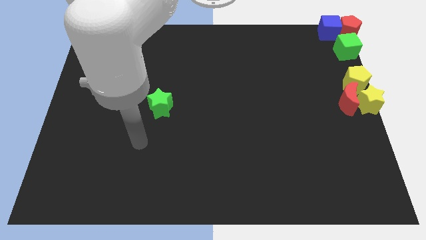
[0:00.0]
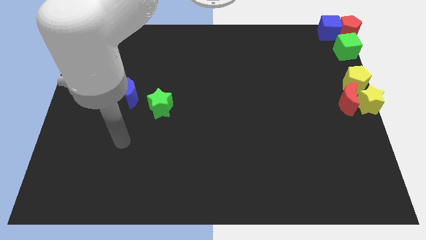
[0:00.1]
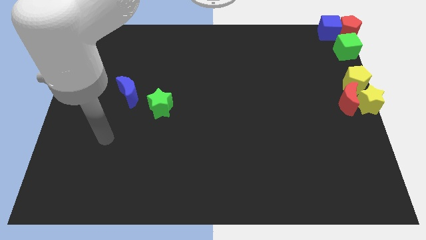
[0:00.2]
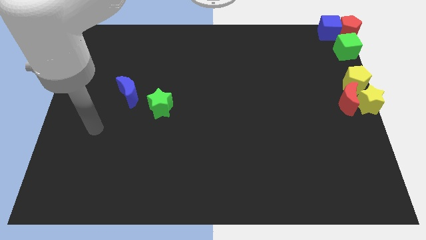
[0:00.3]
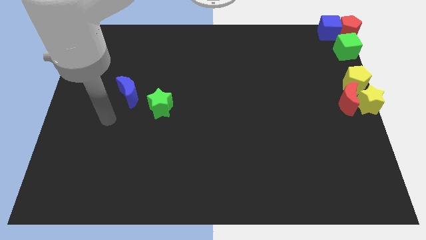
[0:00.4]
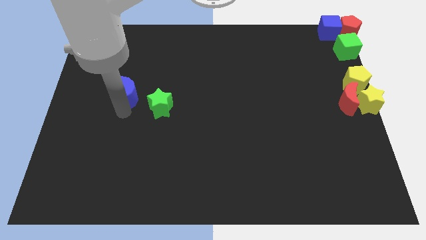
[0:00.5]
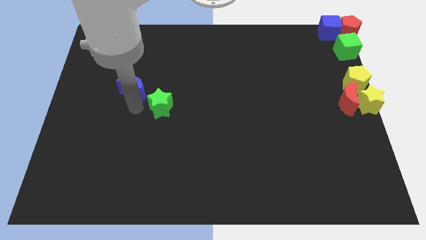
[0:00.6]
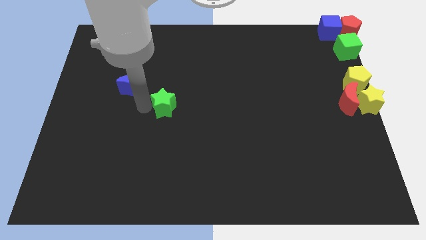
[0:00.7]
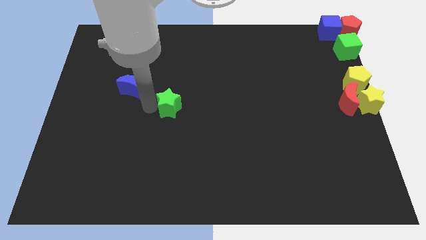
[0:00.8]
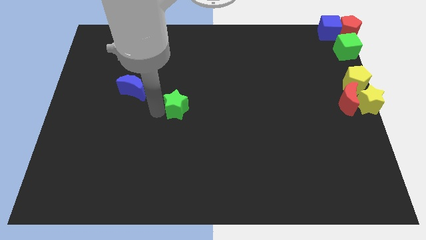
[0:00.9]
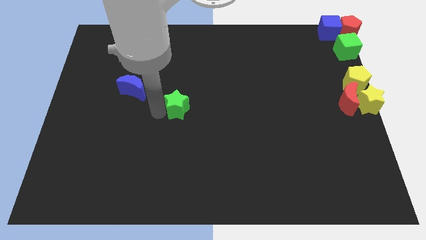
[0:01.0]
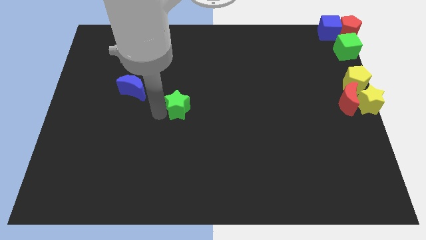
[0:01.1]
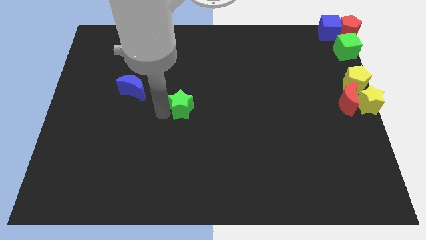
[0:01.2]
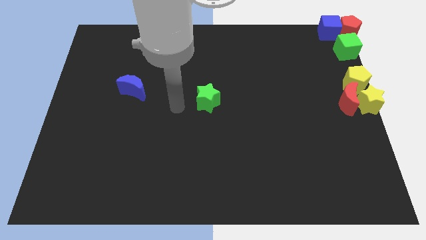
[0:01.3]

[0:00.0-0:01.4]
move the green star towards the center

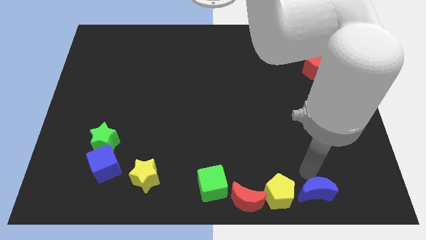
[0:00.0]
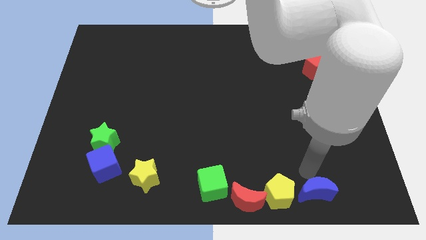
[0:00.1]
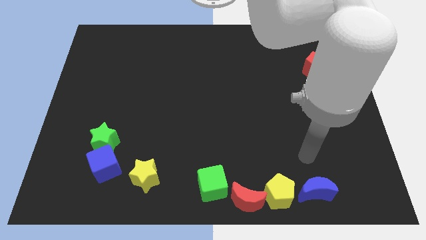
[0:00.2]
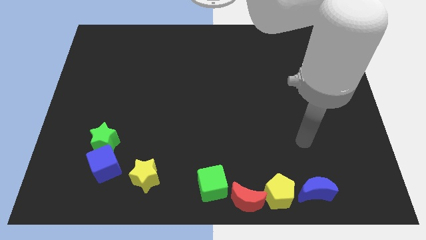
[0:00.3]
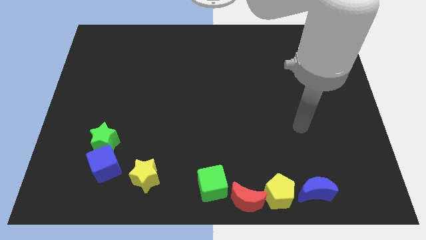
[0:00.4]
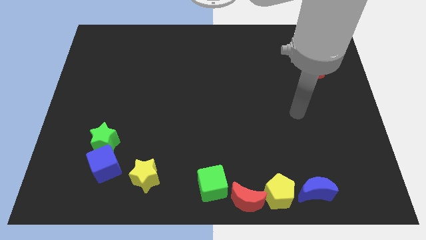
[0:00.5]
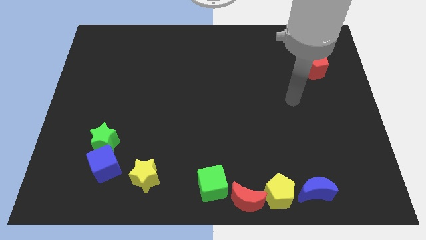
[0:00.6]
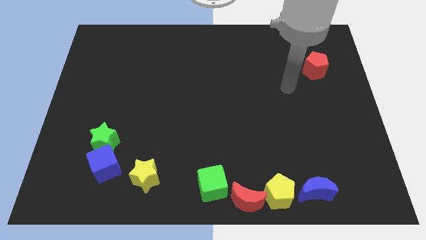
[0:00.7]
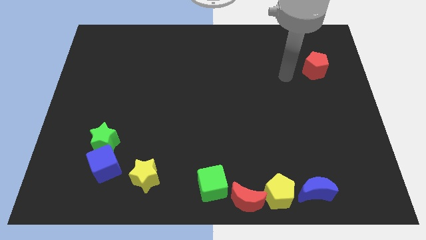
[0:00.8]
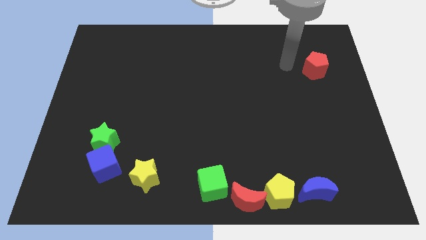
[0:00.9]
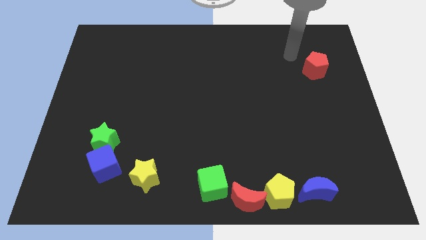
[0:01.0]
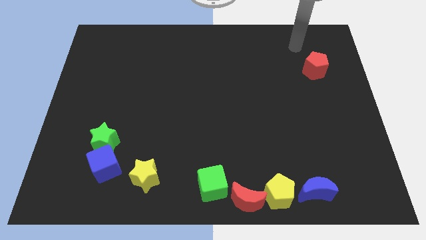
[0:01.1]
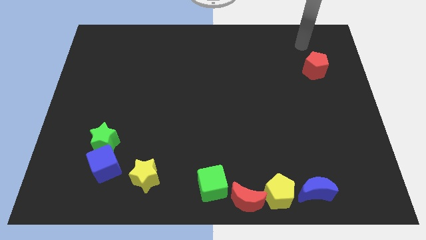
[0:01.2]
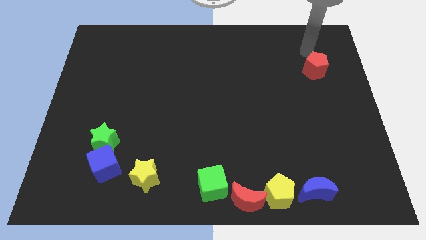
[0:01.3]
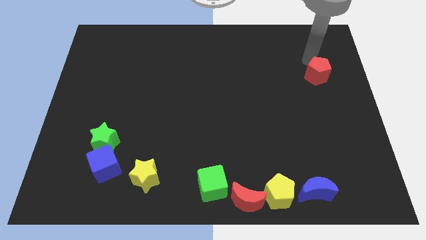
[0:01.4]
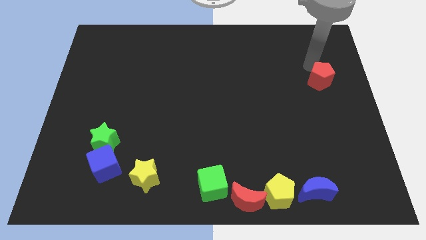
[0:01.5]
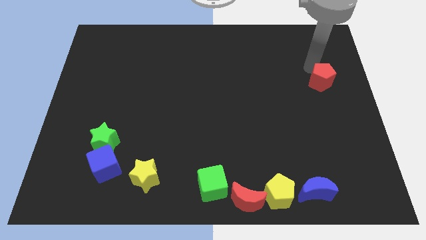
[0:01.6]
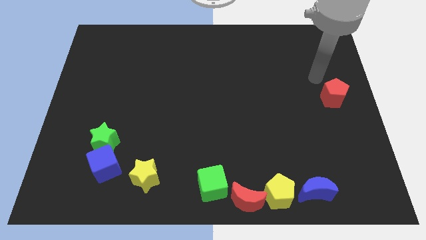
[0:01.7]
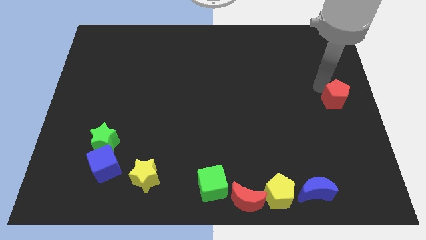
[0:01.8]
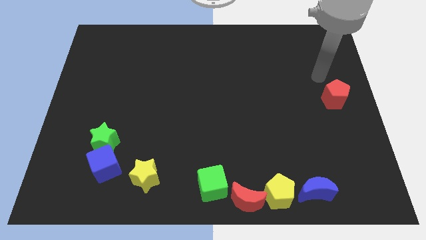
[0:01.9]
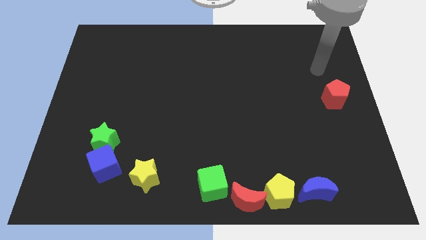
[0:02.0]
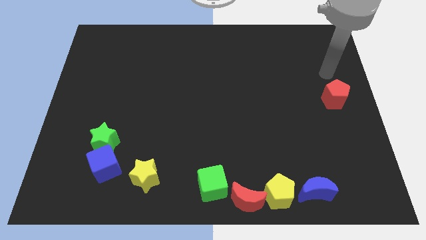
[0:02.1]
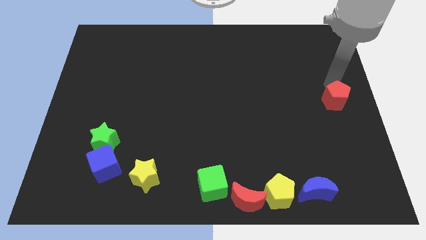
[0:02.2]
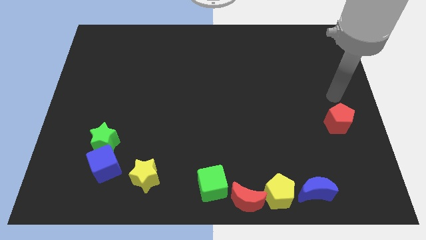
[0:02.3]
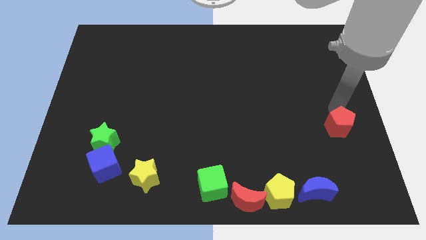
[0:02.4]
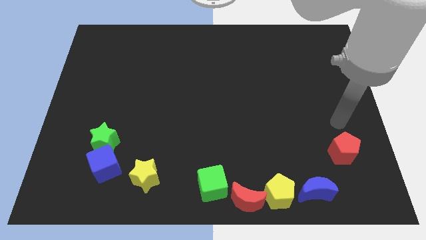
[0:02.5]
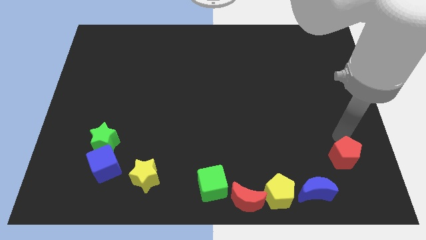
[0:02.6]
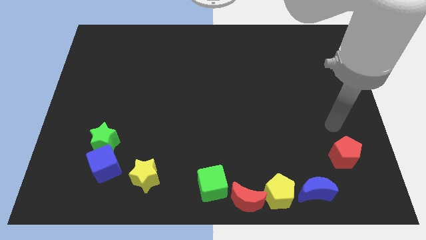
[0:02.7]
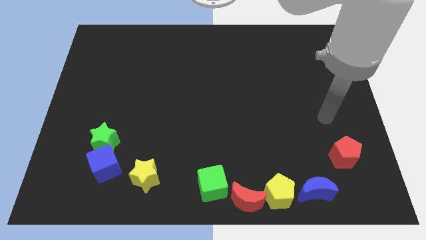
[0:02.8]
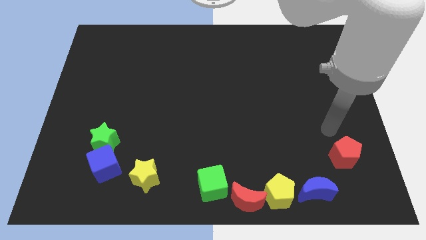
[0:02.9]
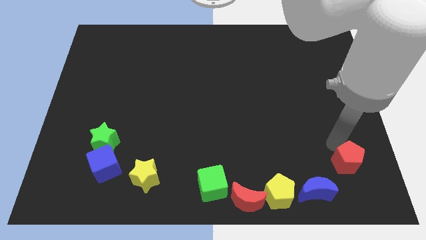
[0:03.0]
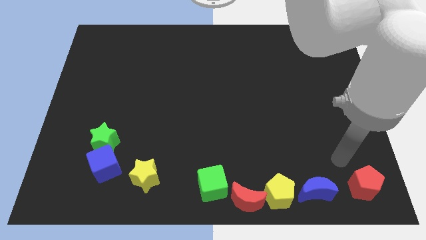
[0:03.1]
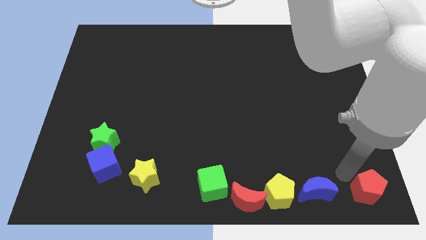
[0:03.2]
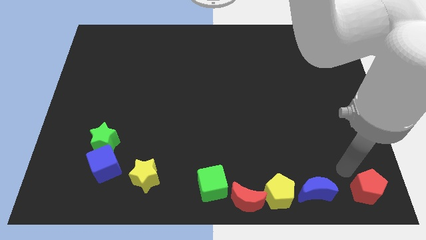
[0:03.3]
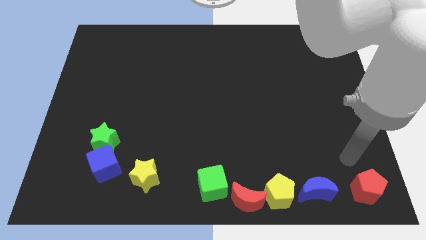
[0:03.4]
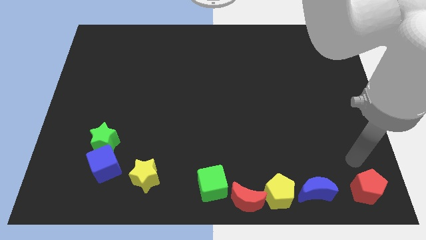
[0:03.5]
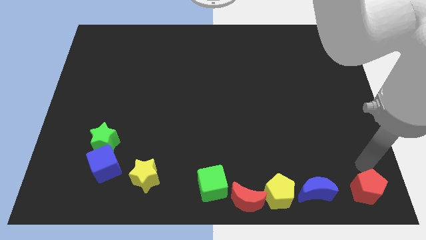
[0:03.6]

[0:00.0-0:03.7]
put the red pentagon at the bottom right corner of the board

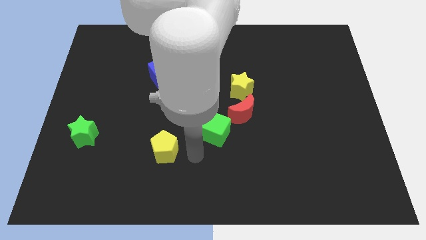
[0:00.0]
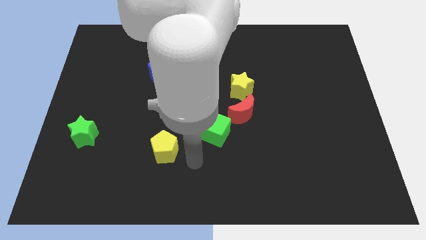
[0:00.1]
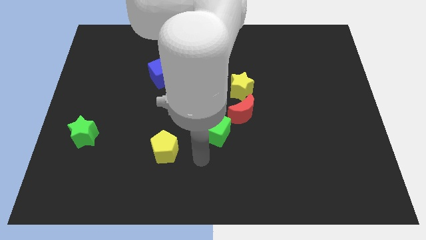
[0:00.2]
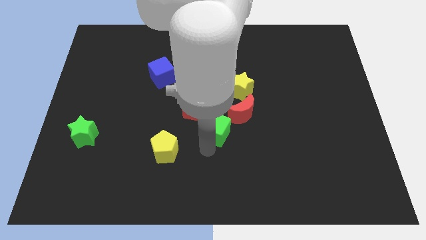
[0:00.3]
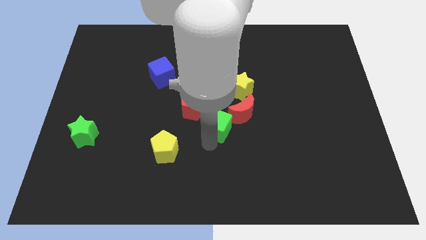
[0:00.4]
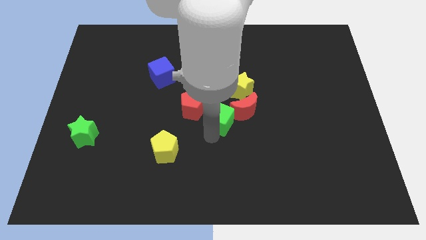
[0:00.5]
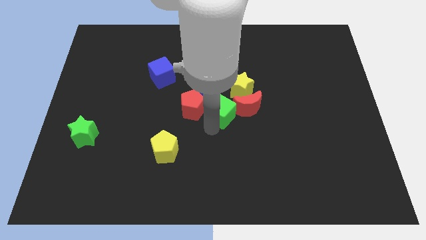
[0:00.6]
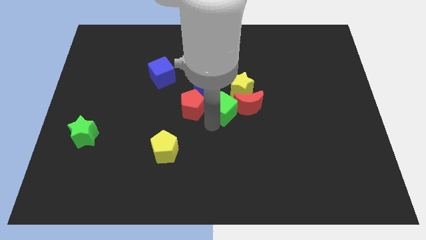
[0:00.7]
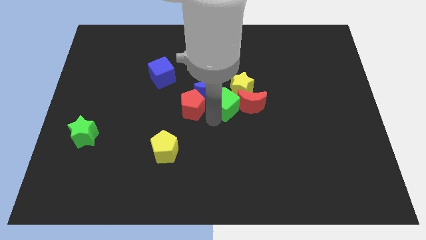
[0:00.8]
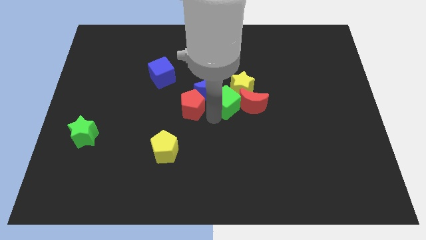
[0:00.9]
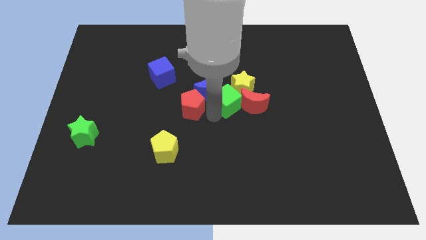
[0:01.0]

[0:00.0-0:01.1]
place the green cube at the center of the board

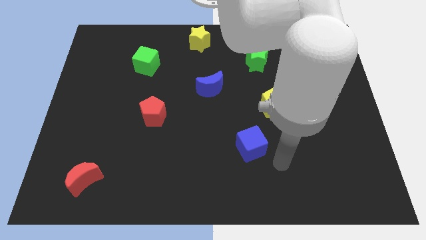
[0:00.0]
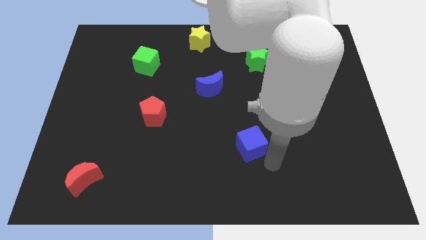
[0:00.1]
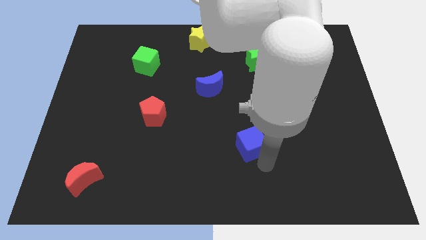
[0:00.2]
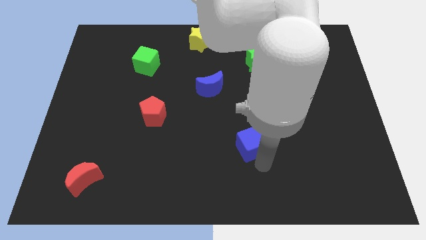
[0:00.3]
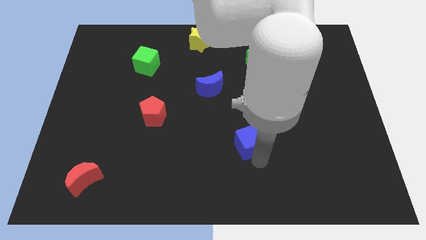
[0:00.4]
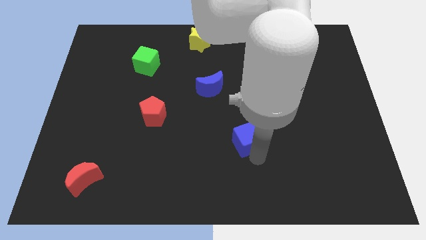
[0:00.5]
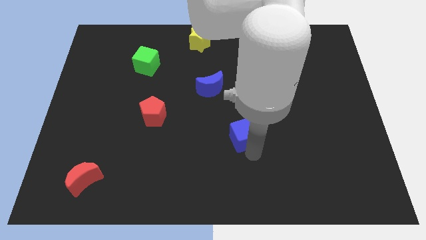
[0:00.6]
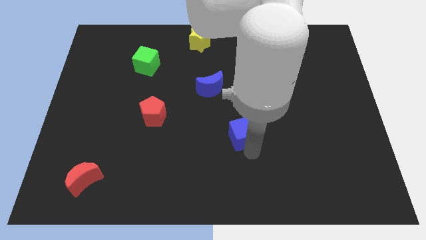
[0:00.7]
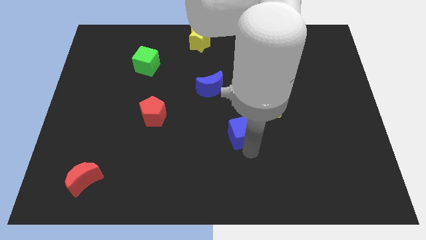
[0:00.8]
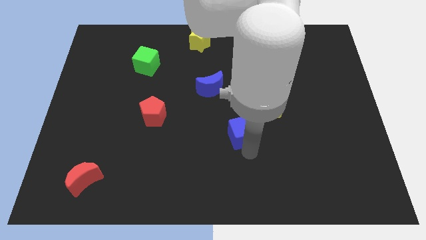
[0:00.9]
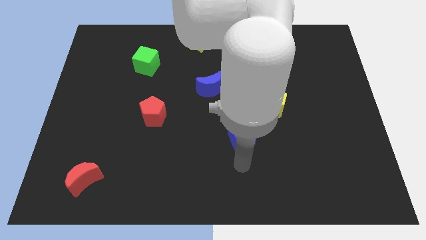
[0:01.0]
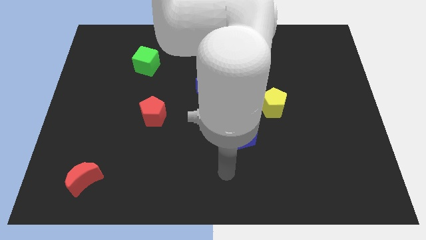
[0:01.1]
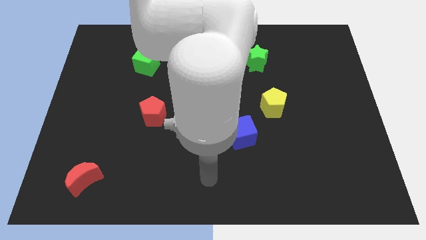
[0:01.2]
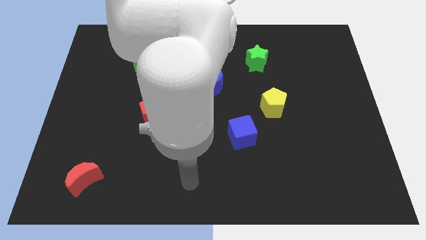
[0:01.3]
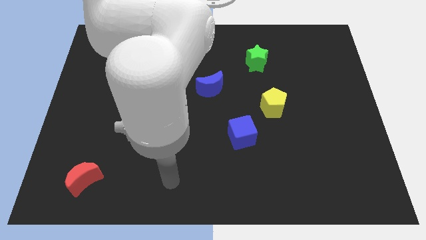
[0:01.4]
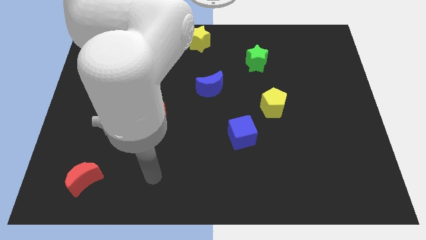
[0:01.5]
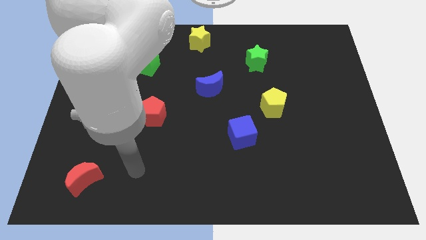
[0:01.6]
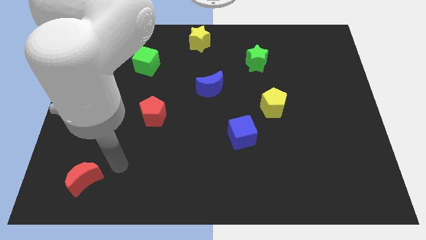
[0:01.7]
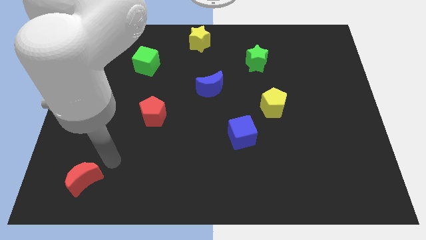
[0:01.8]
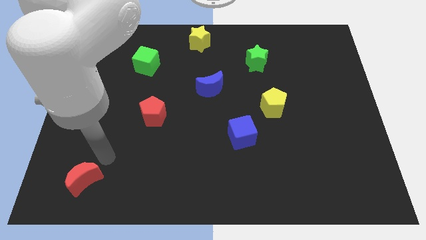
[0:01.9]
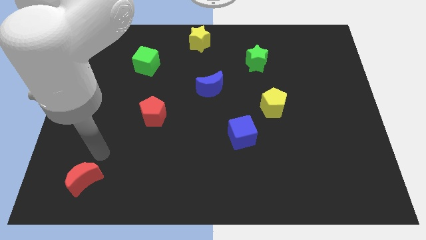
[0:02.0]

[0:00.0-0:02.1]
slide blue cube towards center

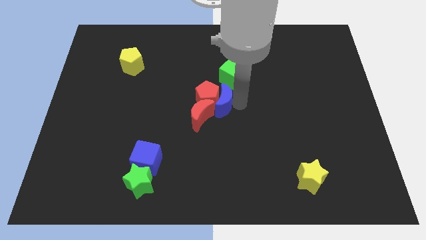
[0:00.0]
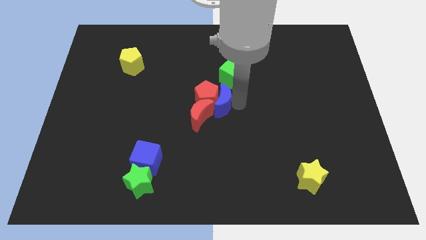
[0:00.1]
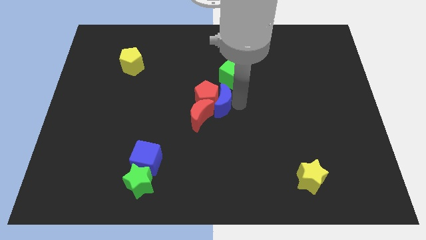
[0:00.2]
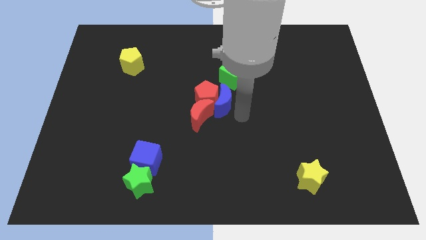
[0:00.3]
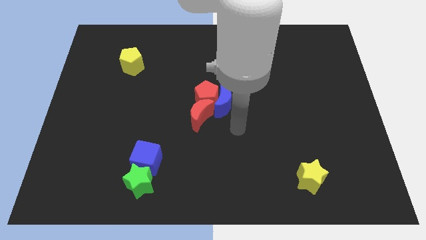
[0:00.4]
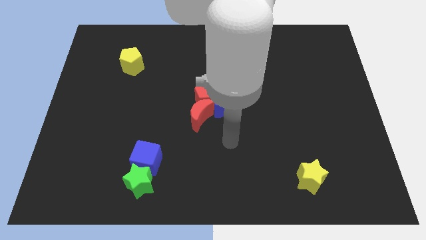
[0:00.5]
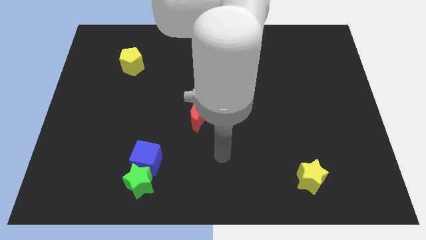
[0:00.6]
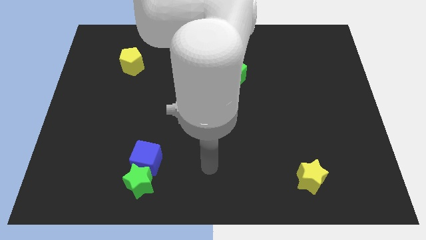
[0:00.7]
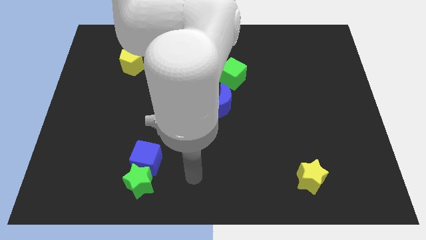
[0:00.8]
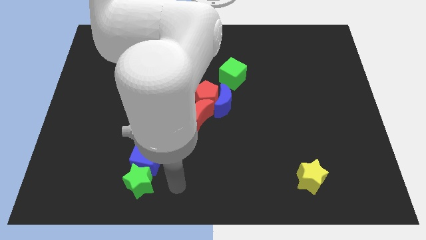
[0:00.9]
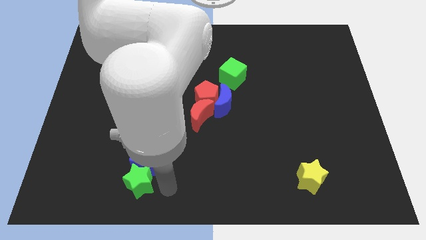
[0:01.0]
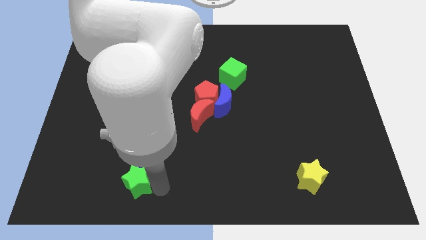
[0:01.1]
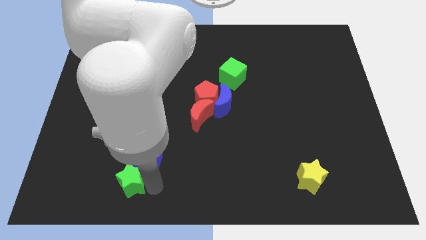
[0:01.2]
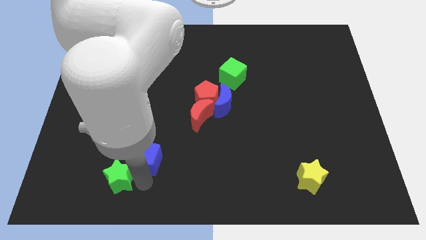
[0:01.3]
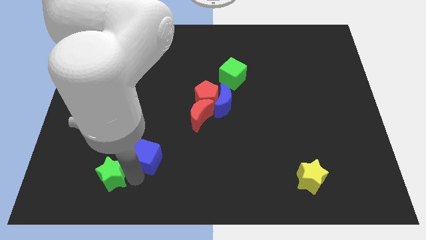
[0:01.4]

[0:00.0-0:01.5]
separate the green star away from the blue cube
